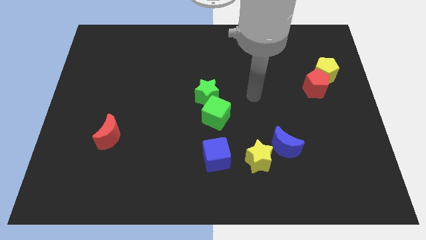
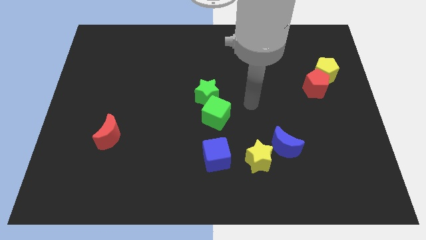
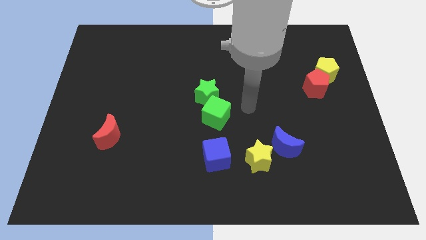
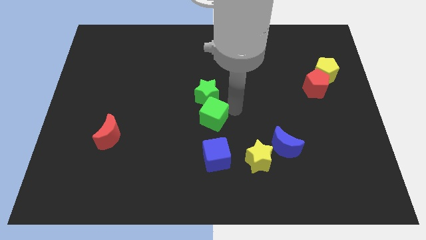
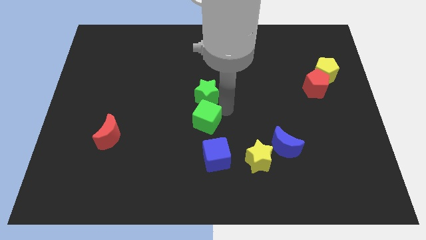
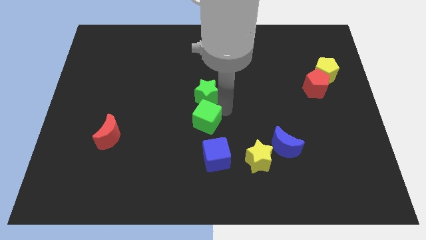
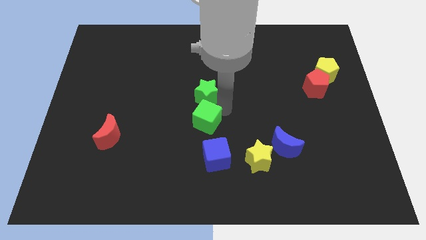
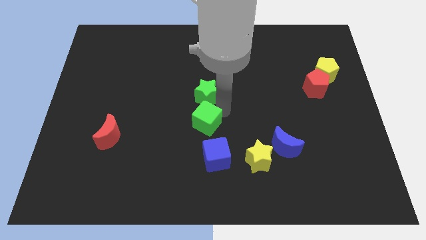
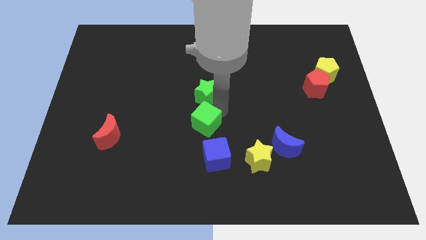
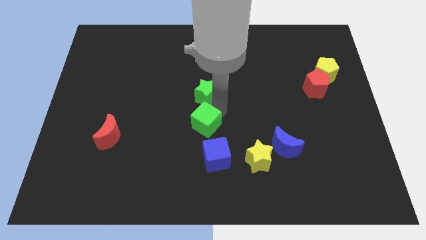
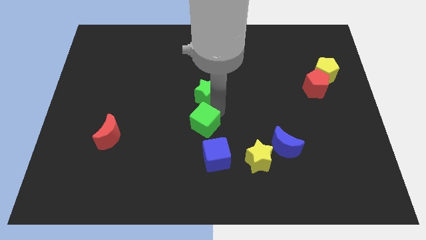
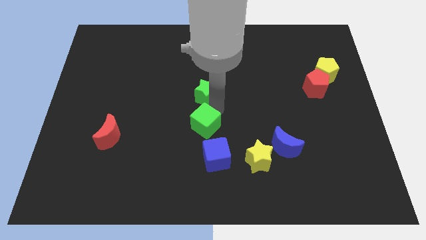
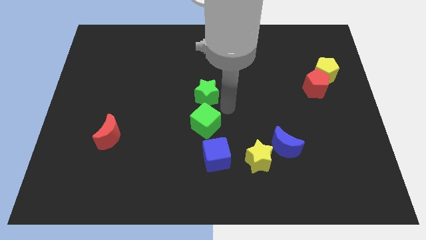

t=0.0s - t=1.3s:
put the green cube below the green star

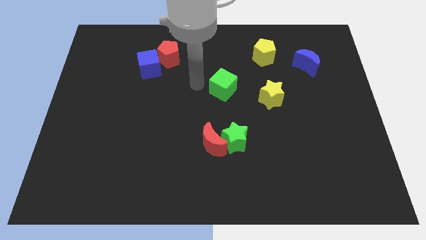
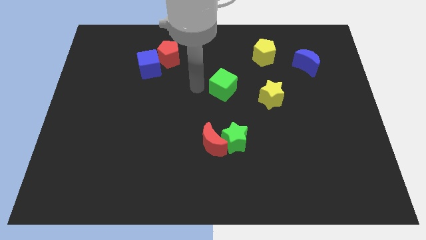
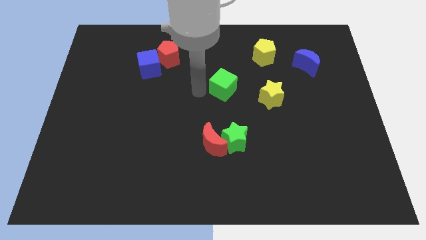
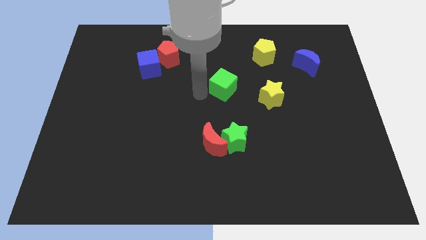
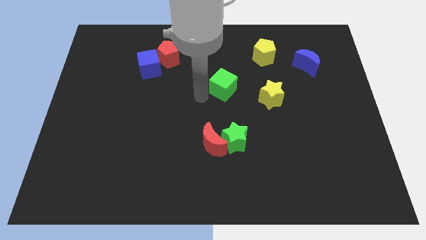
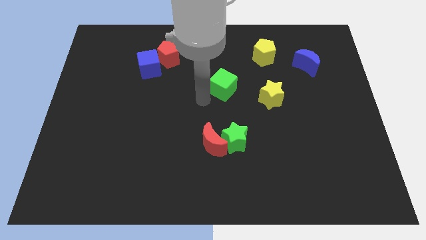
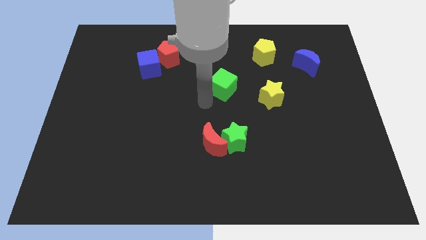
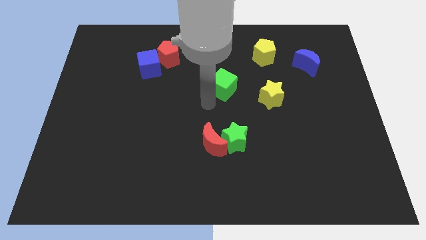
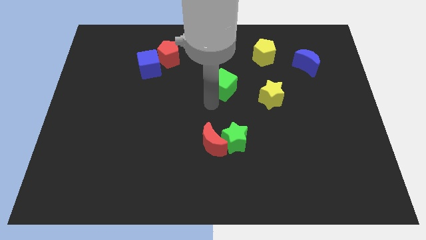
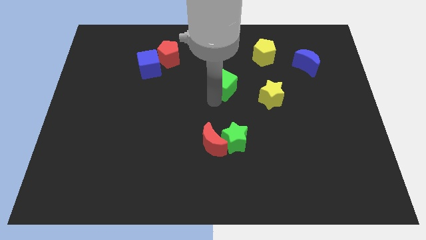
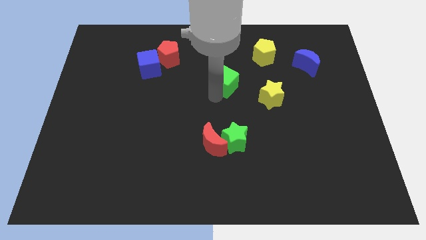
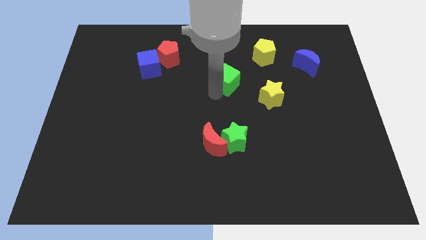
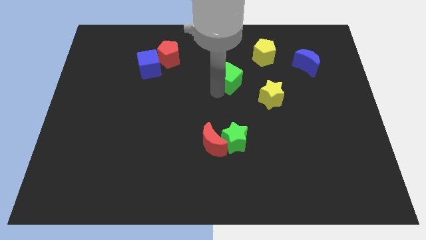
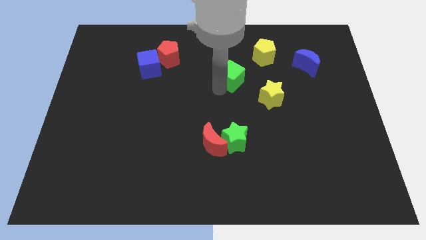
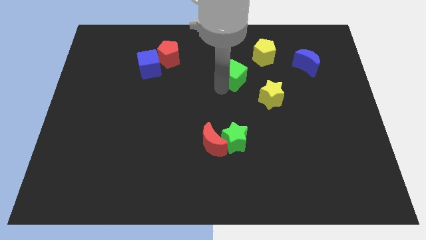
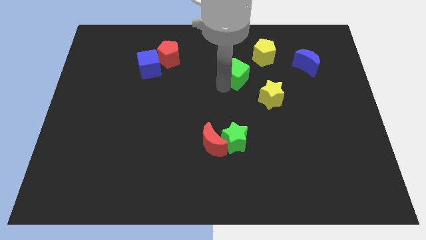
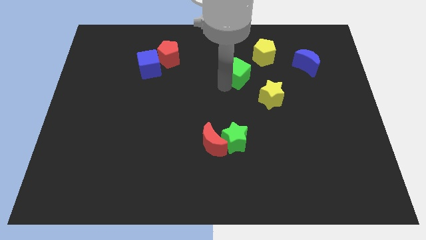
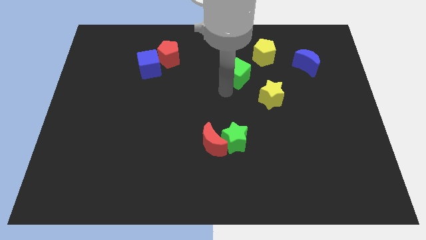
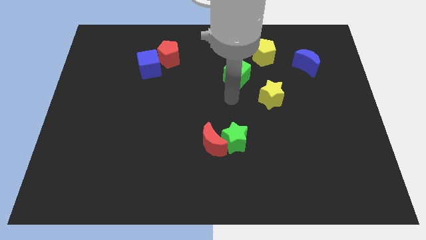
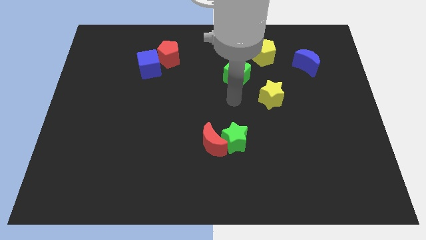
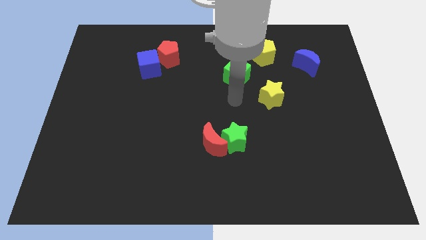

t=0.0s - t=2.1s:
move the green cube up slightly

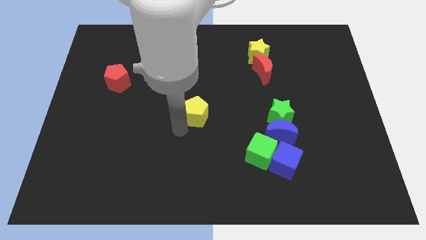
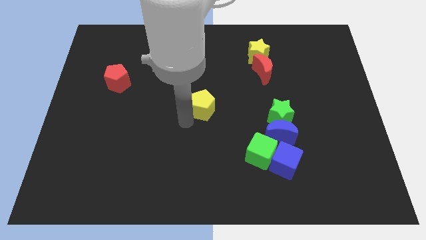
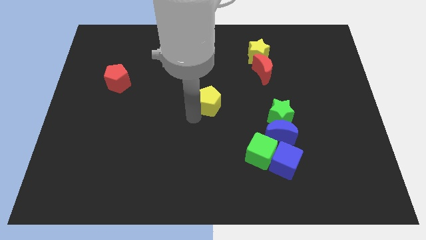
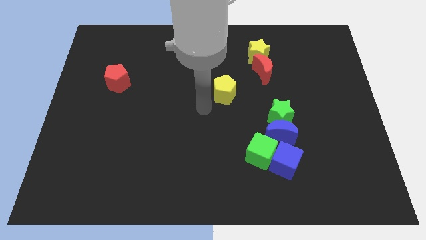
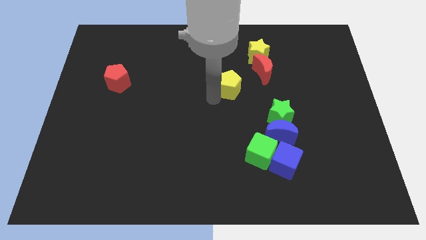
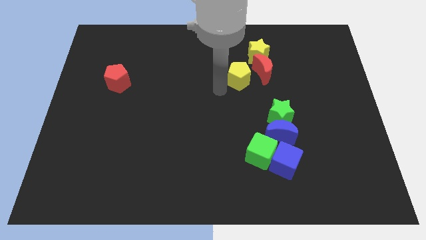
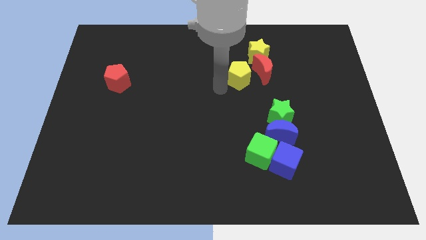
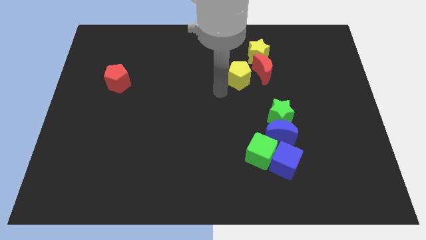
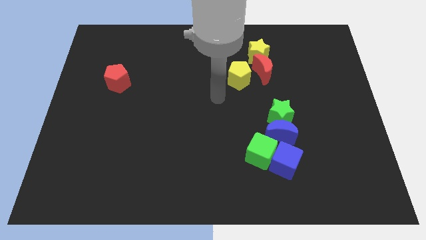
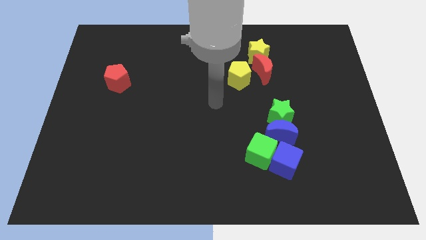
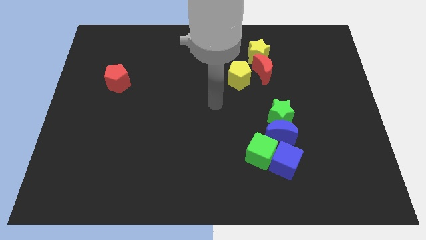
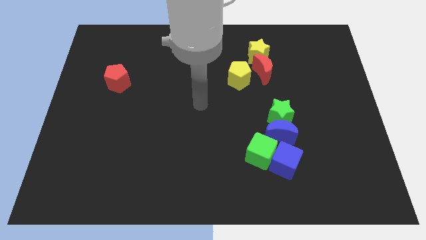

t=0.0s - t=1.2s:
move the yellow pentagon towrads the red crescent

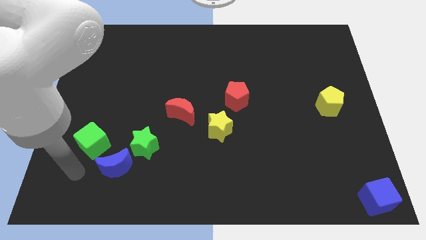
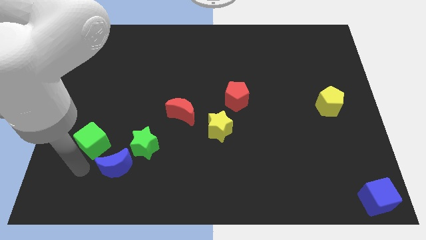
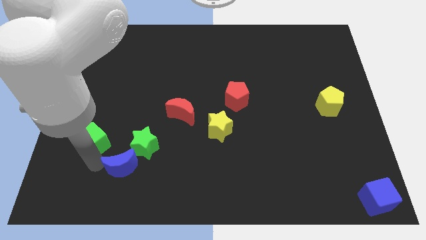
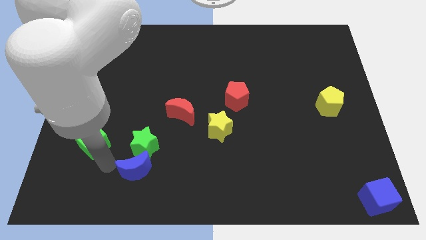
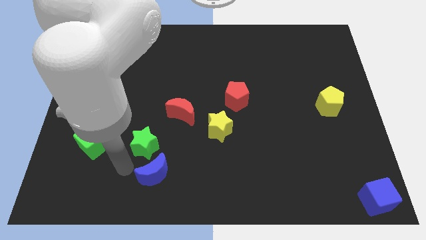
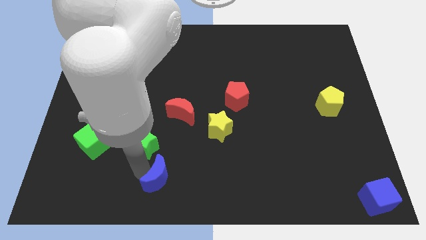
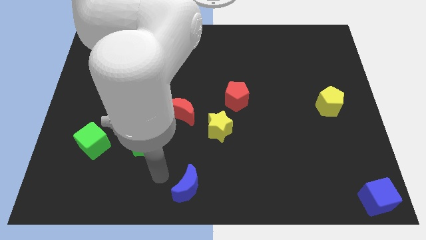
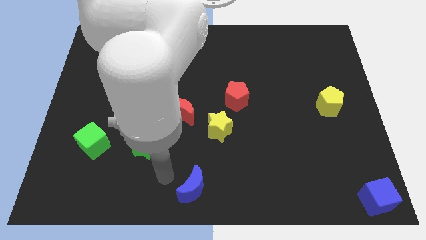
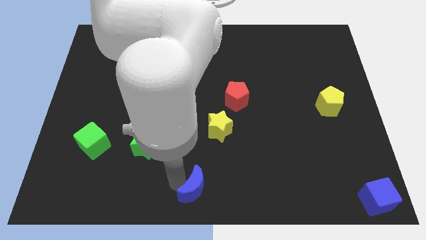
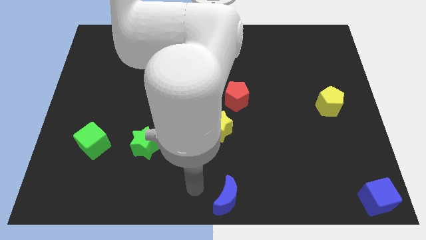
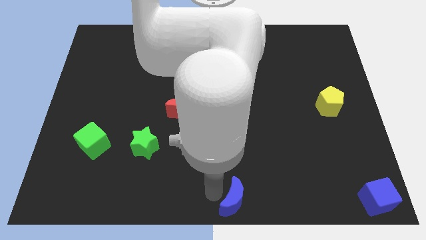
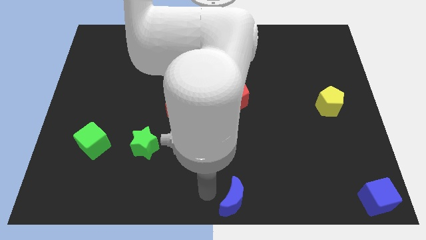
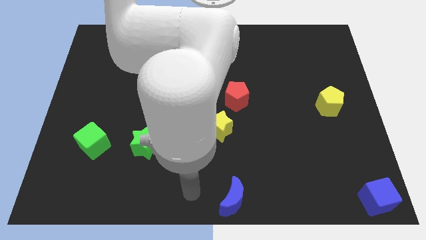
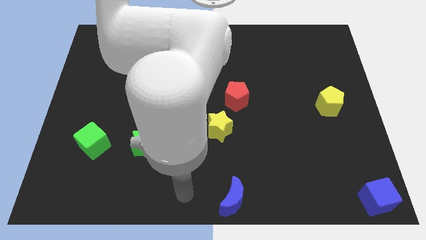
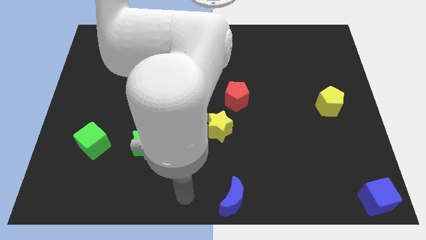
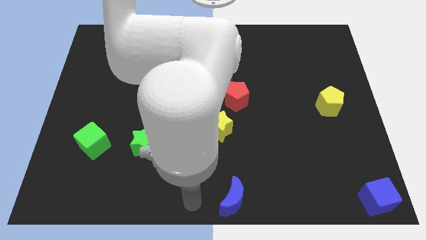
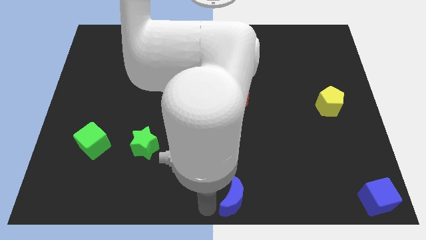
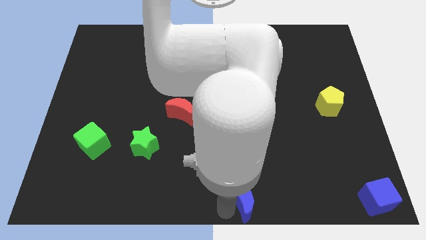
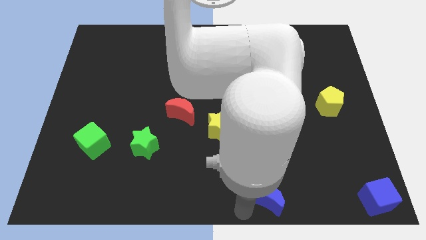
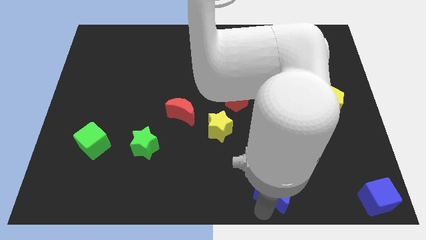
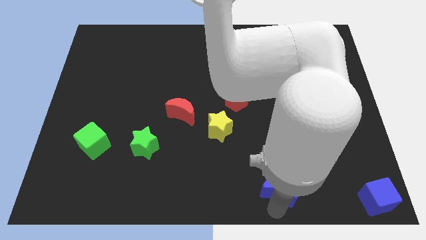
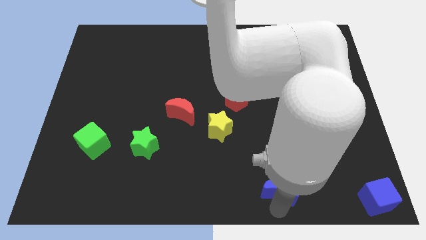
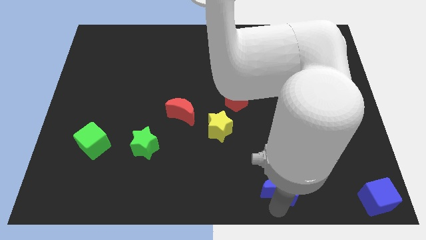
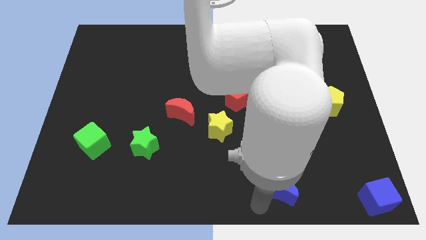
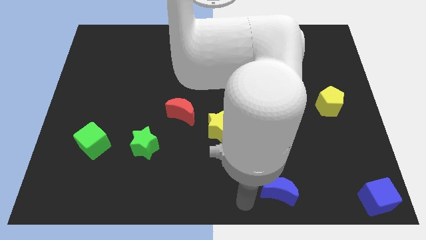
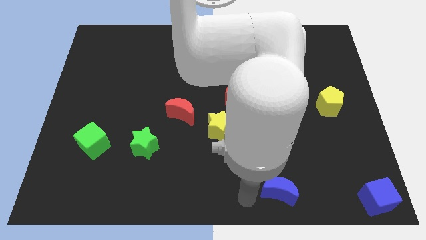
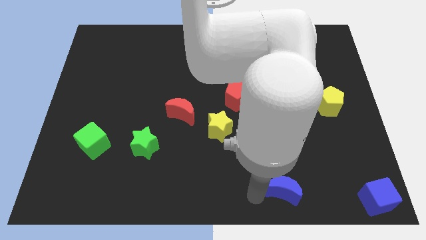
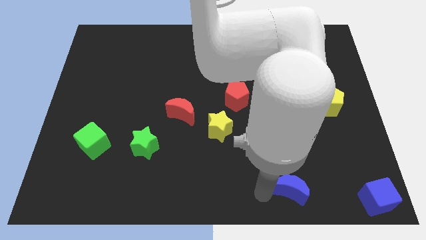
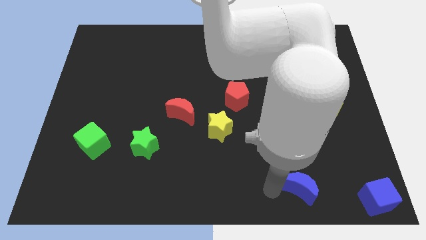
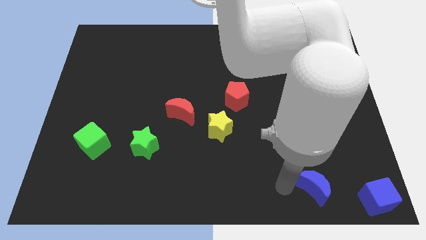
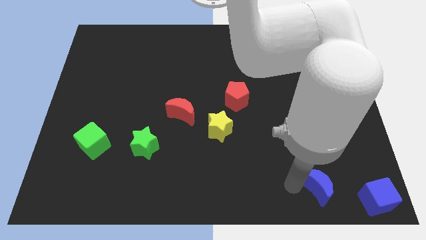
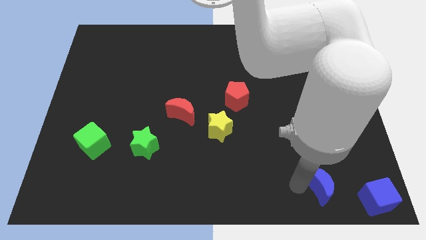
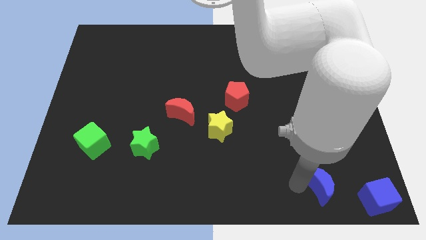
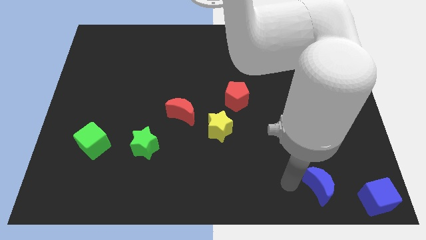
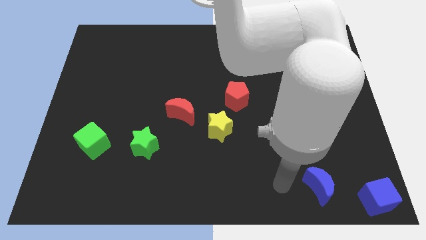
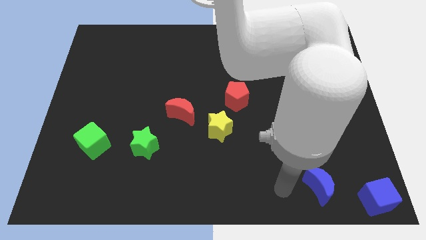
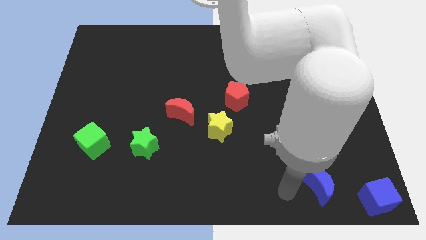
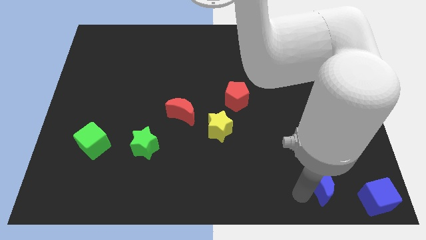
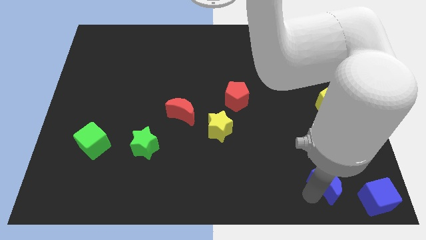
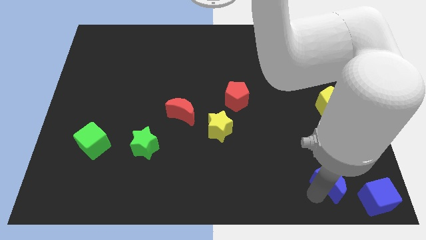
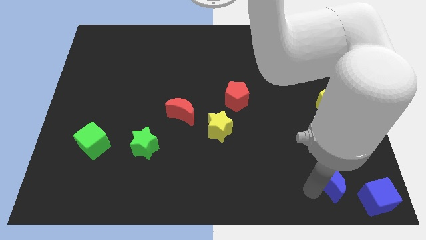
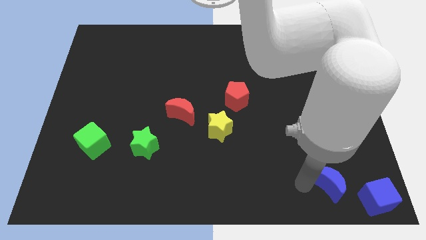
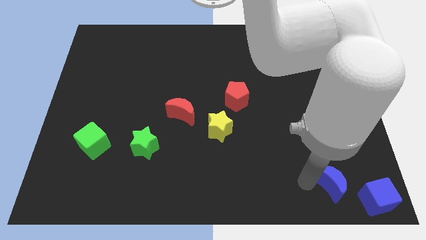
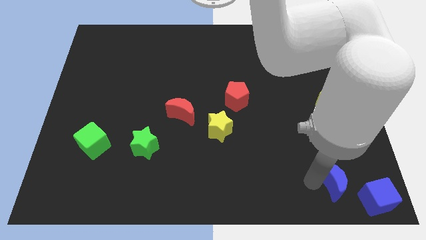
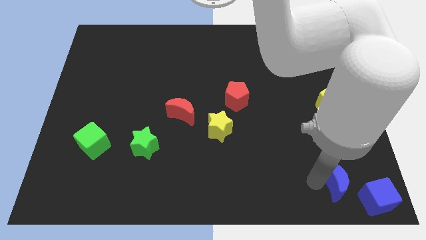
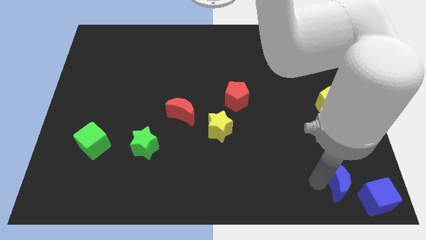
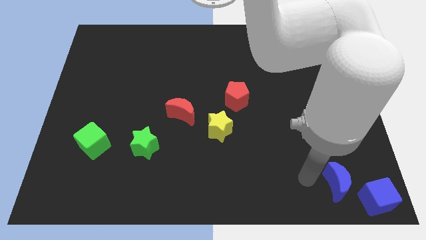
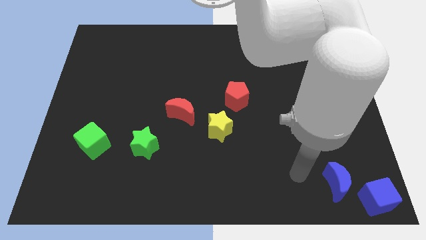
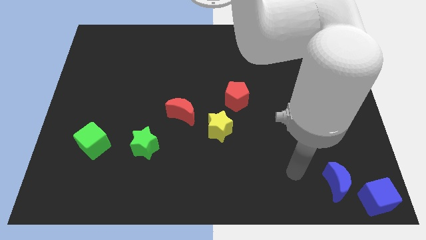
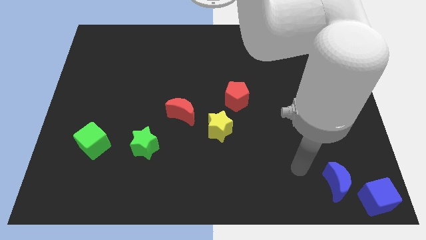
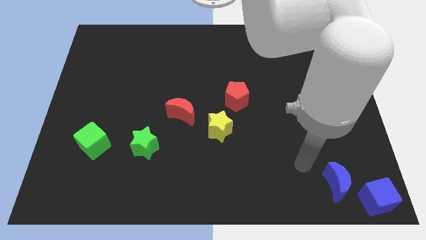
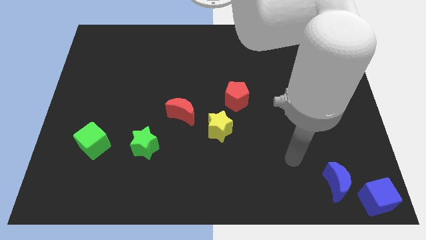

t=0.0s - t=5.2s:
push the blue crescent close to the blue cube
